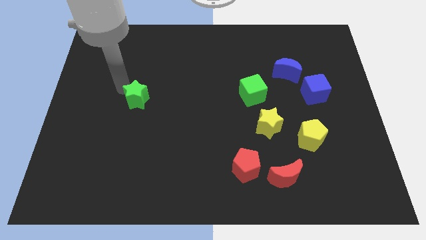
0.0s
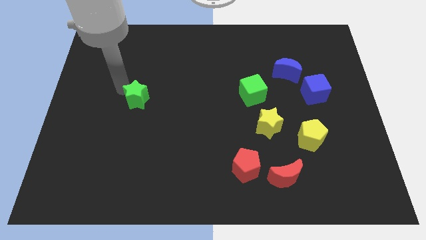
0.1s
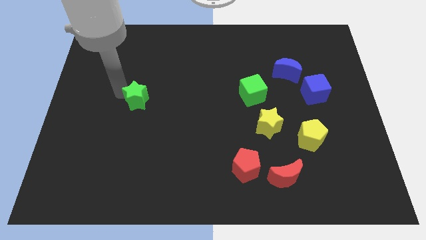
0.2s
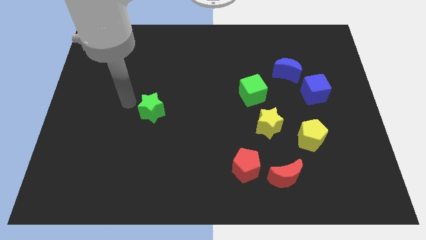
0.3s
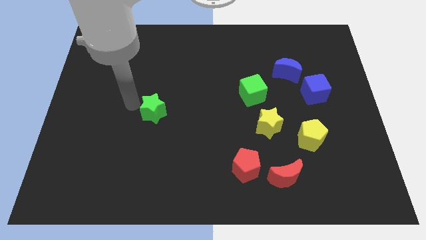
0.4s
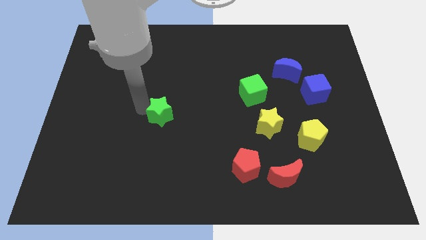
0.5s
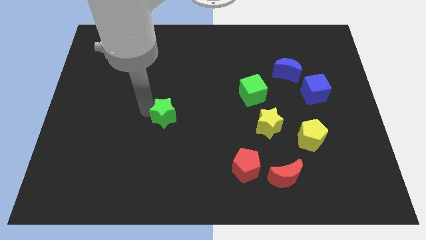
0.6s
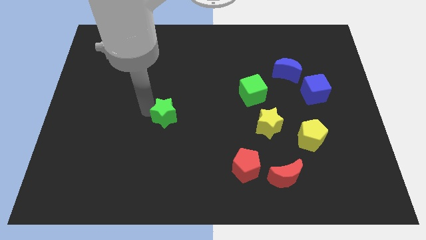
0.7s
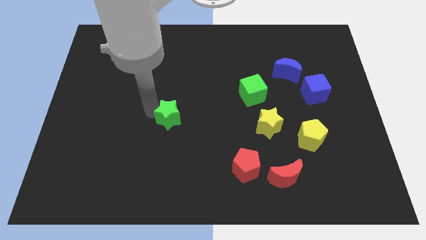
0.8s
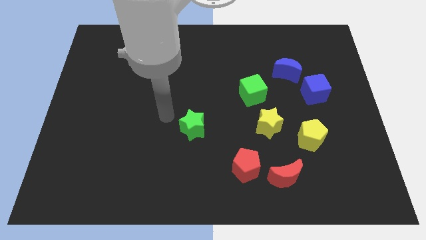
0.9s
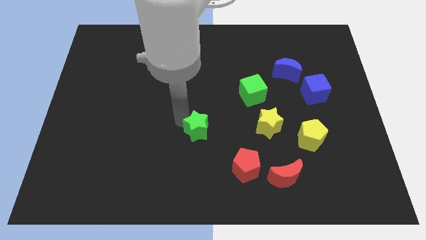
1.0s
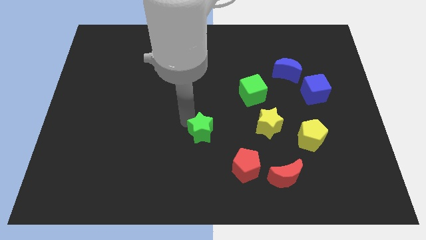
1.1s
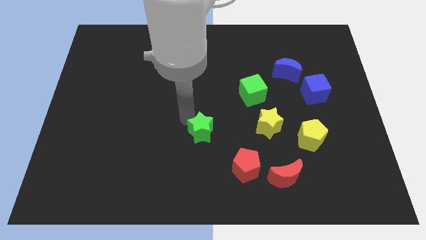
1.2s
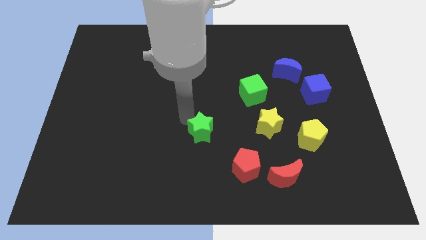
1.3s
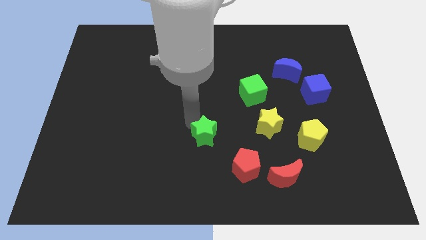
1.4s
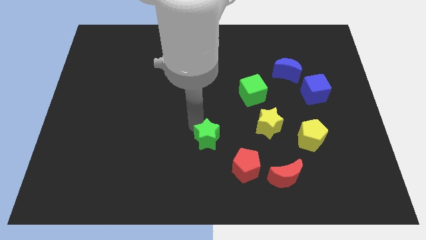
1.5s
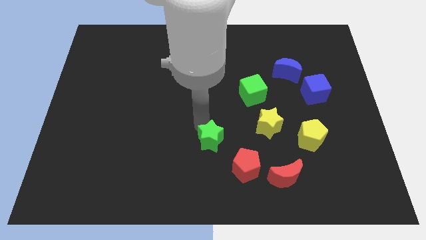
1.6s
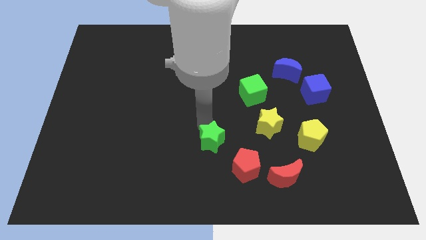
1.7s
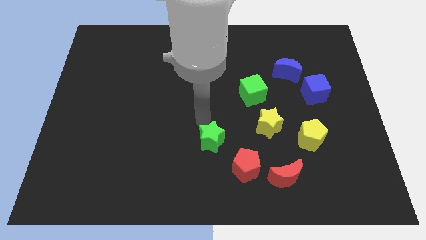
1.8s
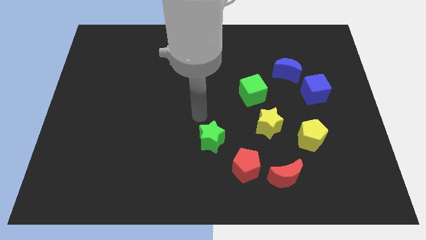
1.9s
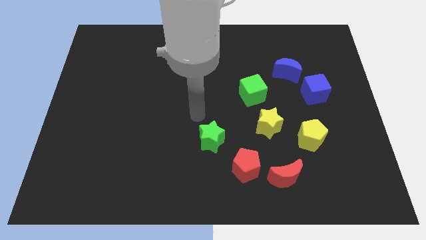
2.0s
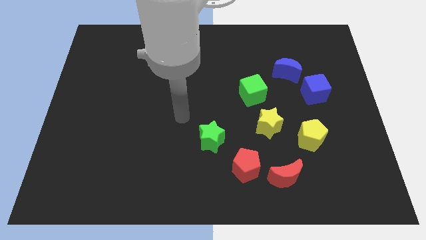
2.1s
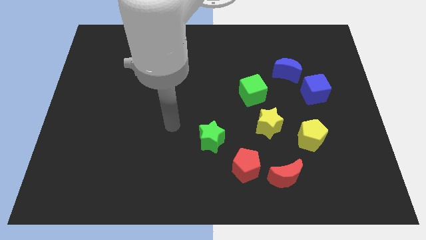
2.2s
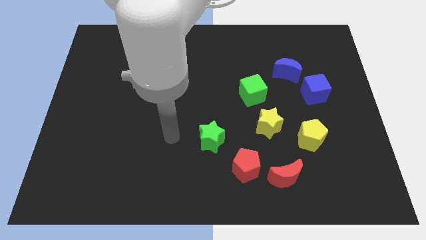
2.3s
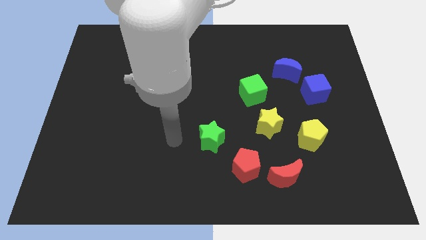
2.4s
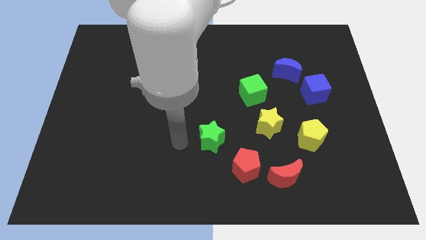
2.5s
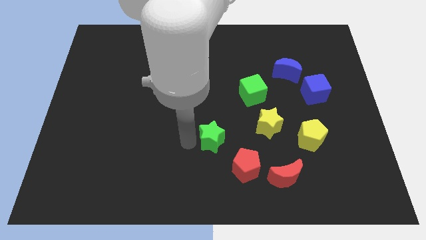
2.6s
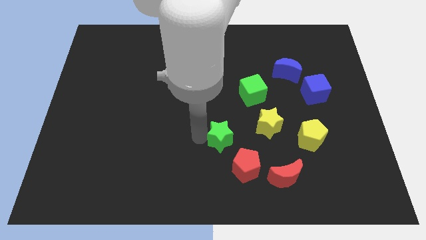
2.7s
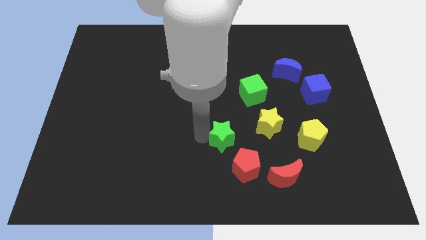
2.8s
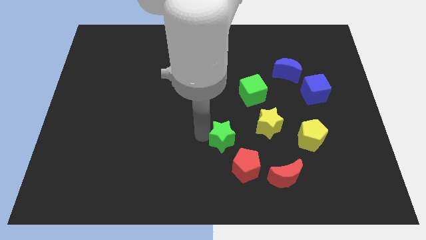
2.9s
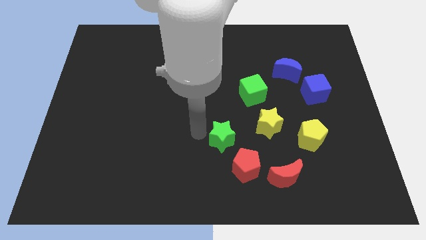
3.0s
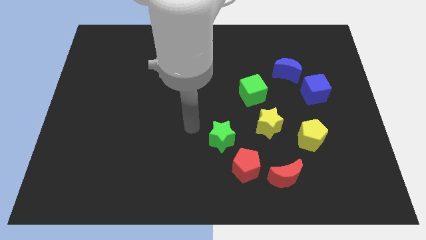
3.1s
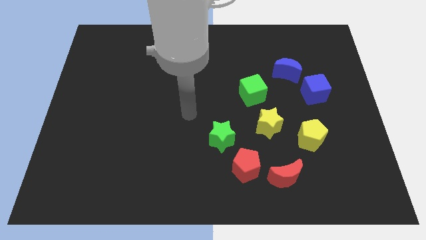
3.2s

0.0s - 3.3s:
push the green star towards the bottom center

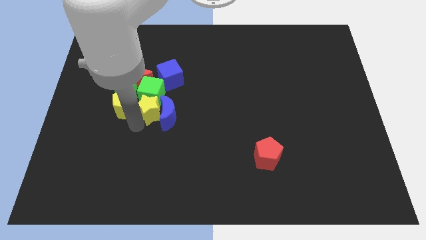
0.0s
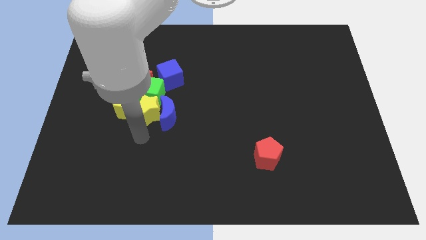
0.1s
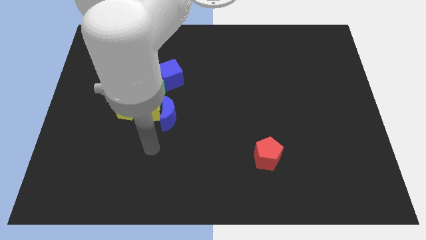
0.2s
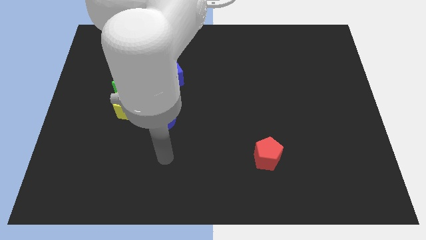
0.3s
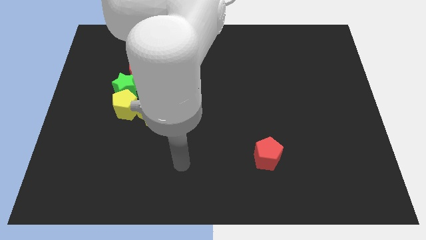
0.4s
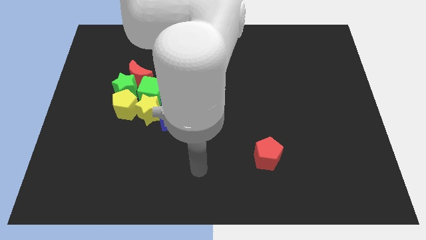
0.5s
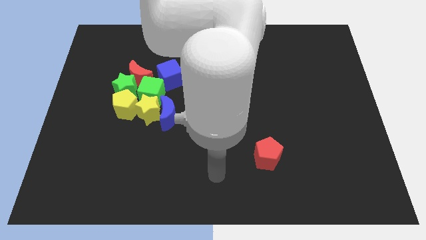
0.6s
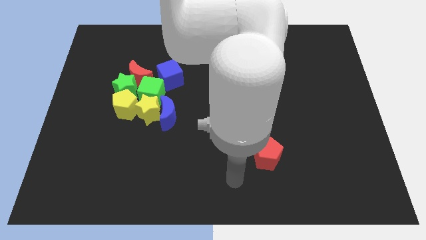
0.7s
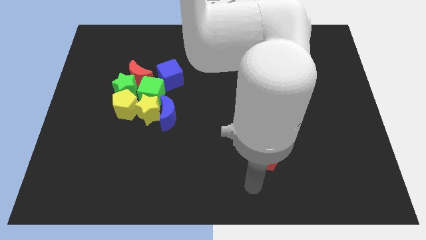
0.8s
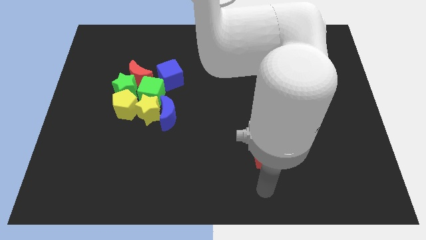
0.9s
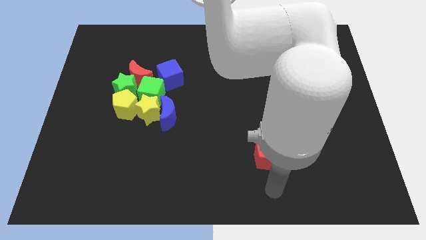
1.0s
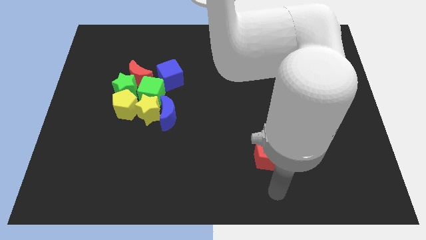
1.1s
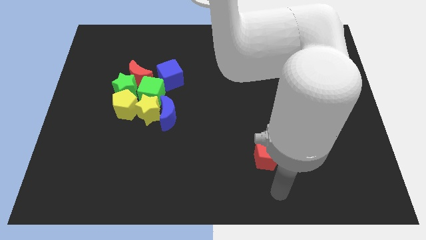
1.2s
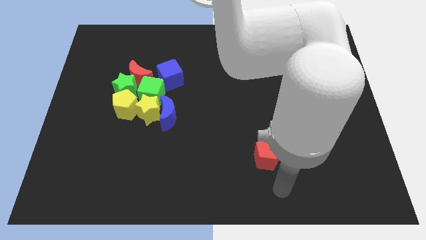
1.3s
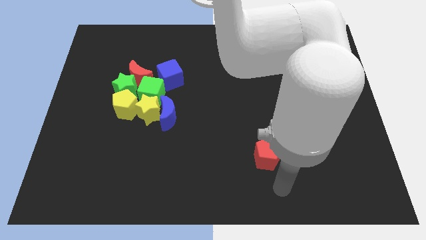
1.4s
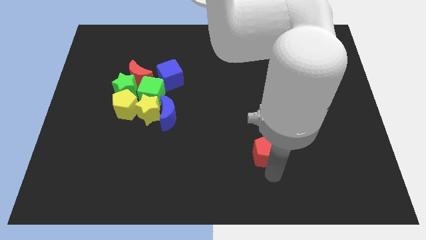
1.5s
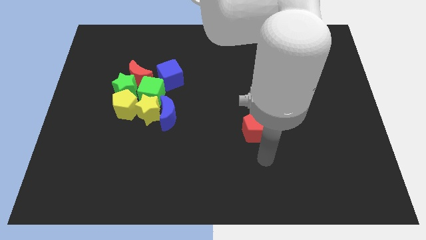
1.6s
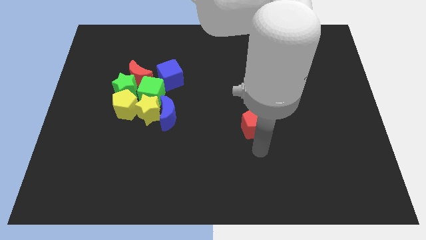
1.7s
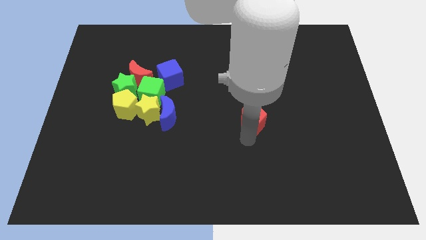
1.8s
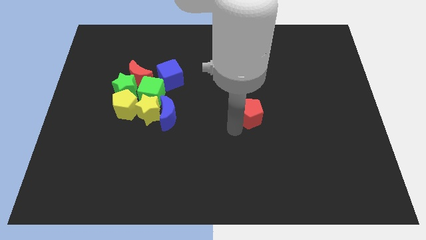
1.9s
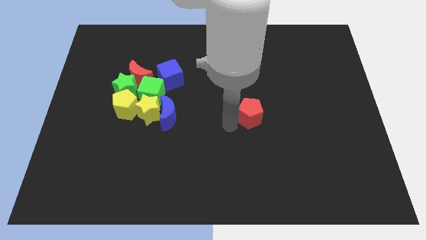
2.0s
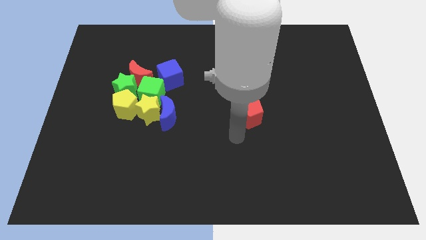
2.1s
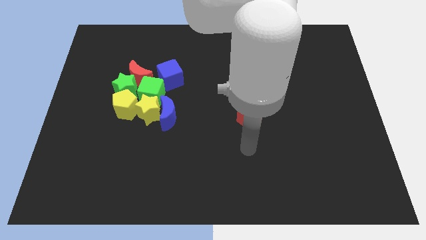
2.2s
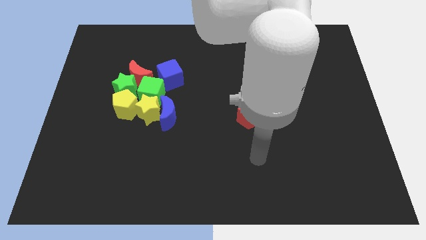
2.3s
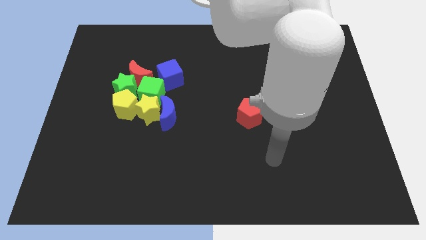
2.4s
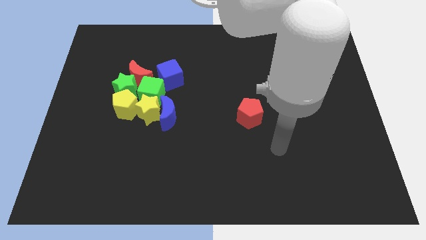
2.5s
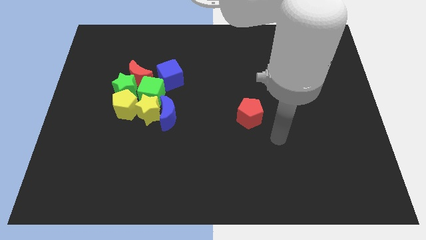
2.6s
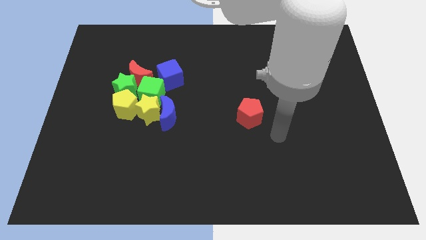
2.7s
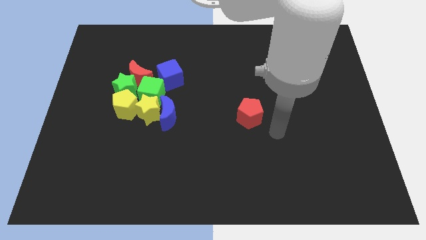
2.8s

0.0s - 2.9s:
place the red pentagon parallel to the right of the blue crescent

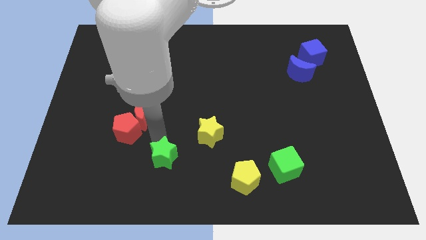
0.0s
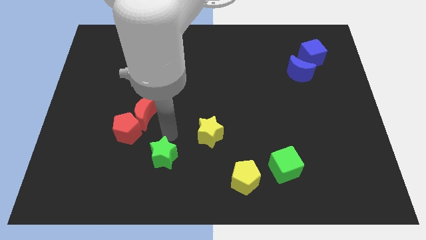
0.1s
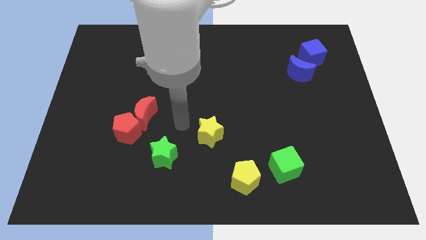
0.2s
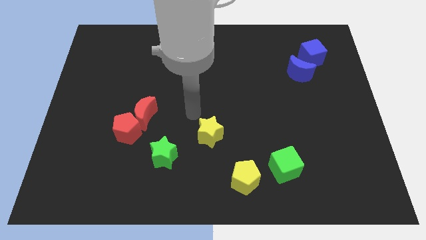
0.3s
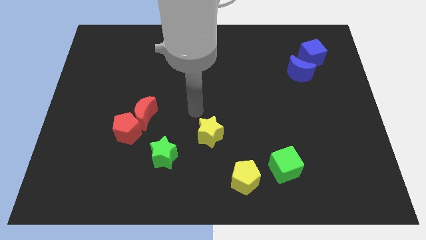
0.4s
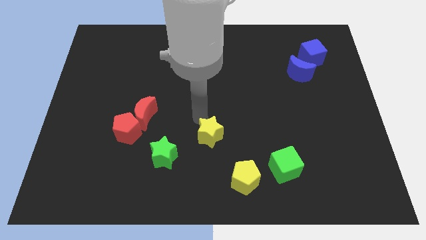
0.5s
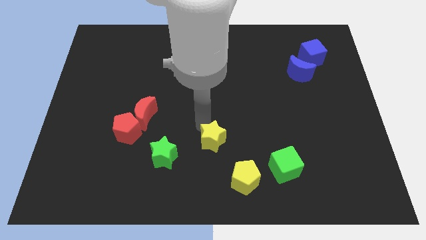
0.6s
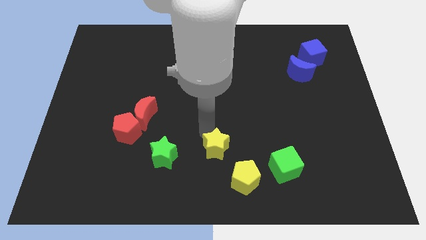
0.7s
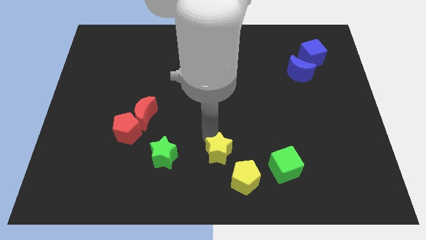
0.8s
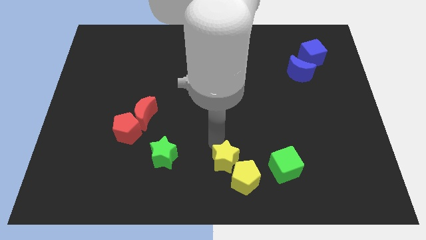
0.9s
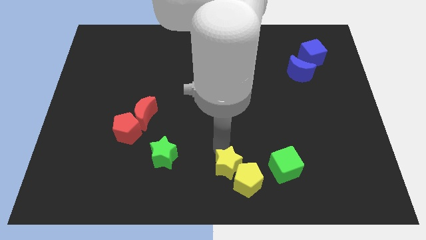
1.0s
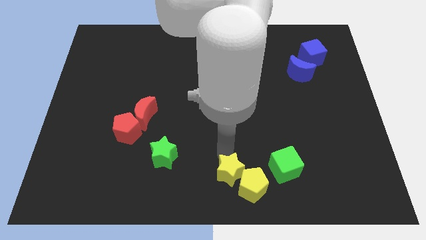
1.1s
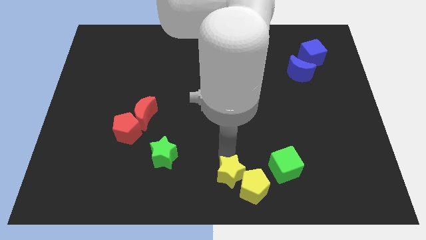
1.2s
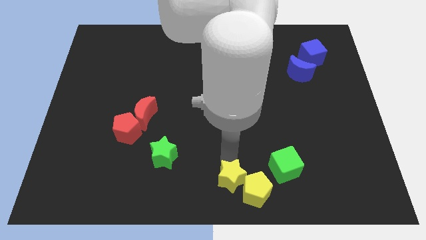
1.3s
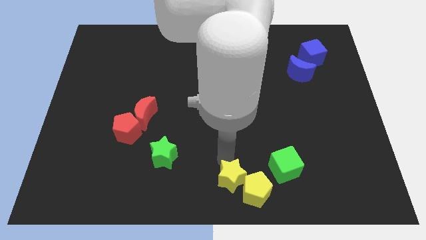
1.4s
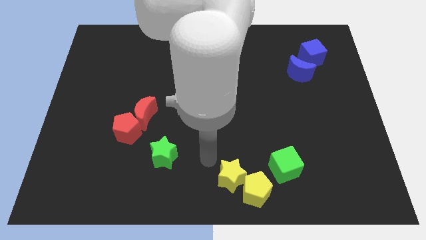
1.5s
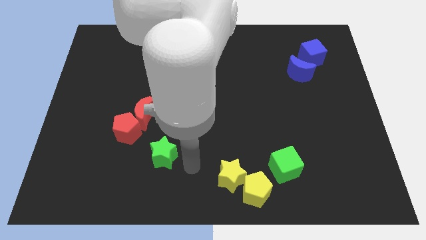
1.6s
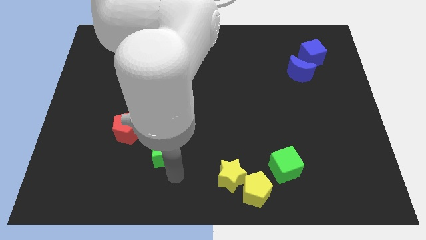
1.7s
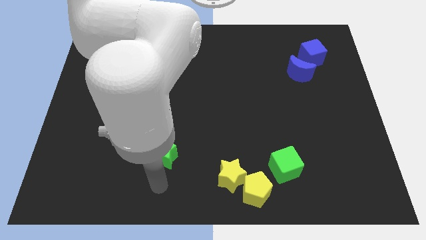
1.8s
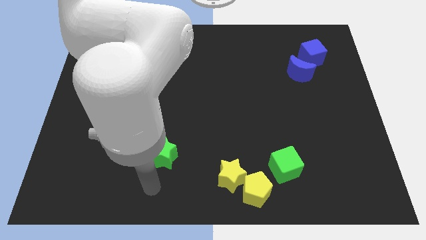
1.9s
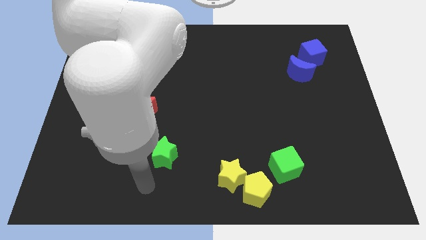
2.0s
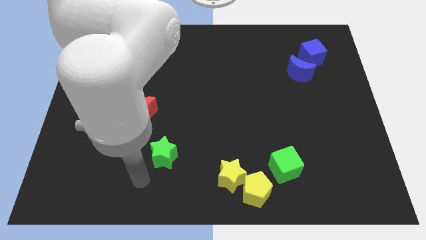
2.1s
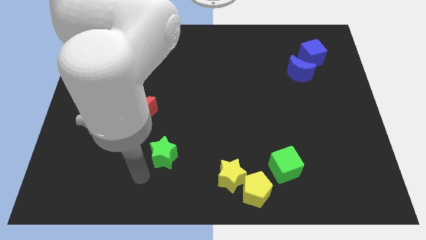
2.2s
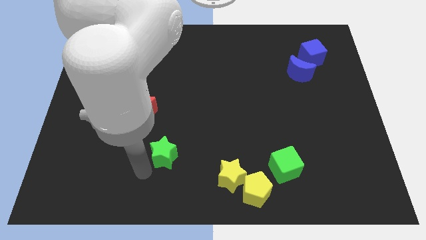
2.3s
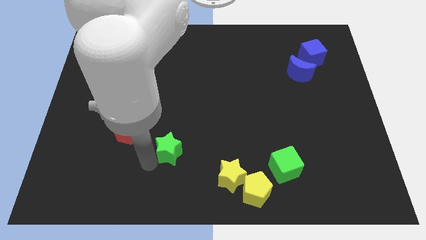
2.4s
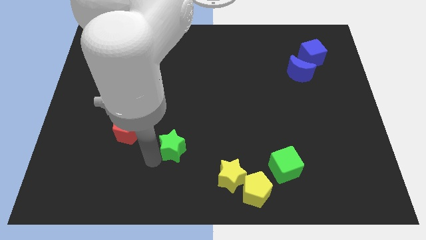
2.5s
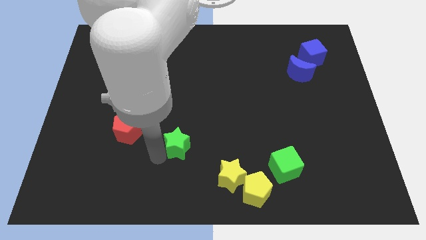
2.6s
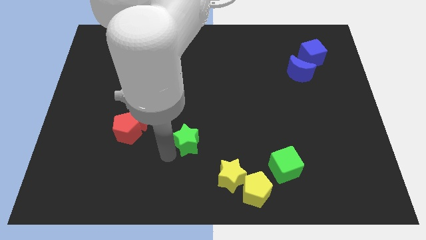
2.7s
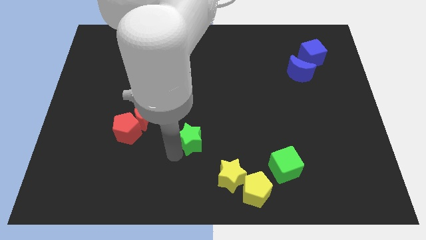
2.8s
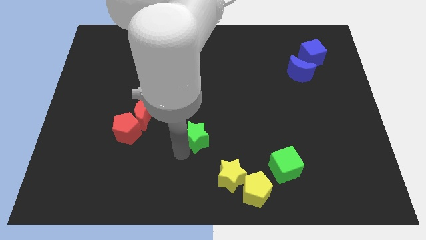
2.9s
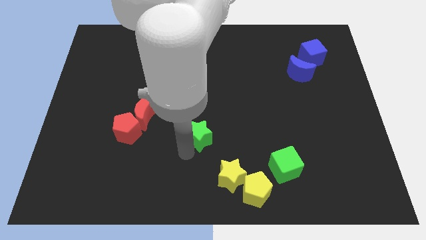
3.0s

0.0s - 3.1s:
push green star slightly towards right
